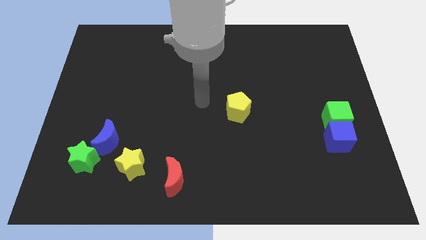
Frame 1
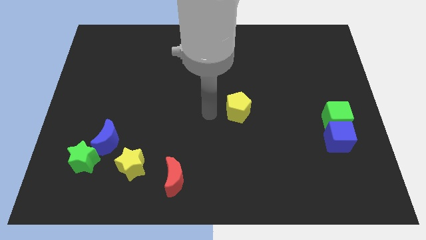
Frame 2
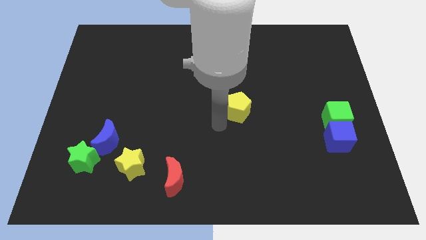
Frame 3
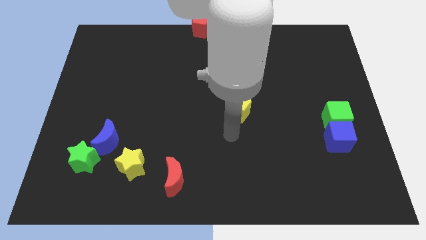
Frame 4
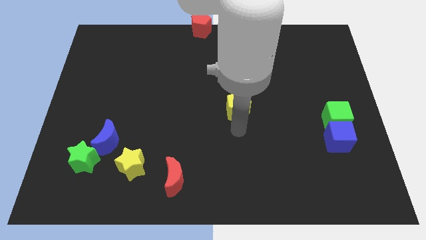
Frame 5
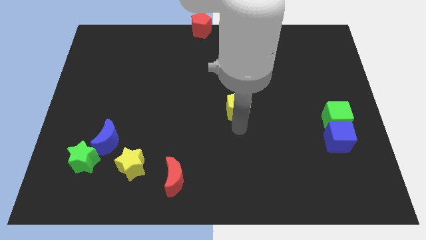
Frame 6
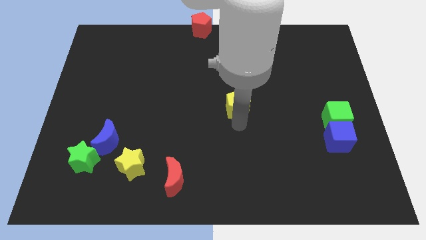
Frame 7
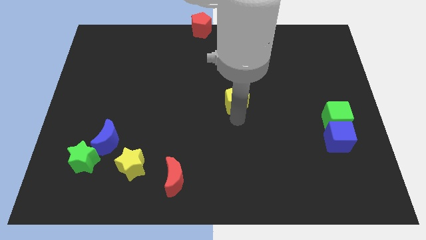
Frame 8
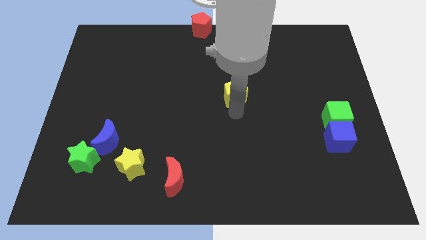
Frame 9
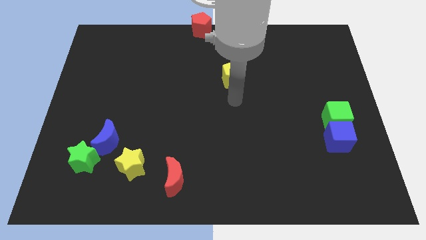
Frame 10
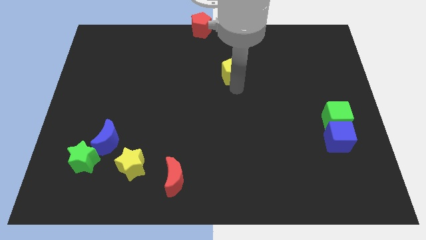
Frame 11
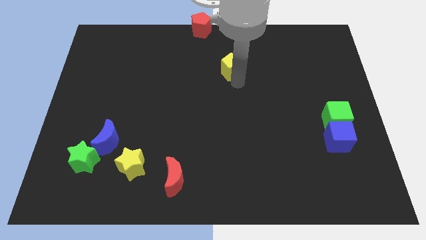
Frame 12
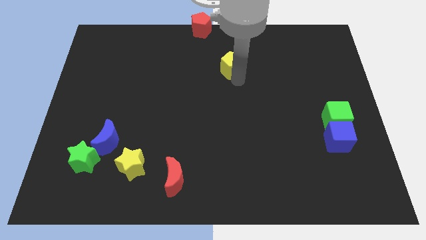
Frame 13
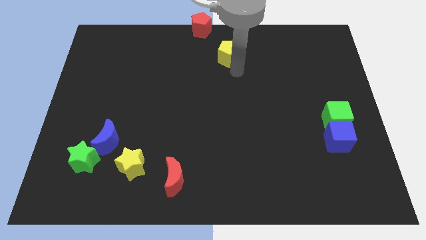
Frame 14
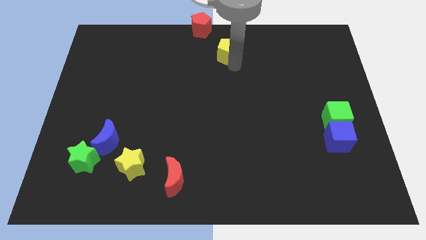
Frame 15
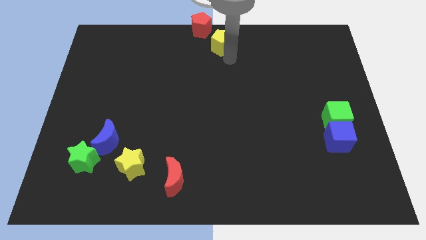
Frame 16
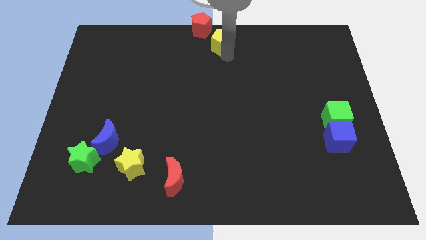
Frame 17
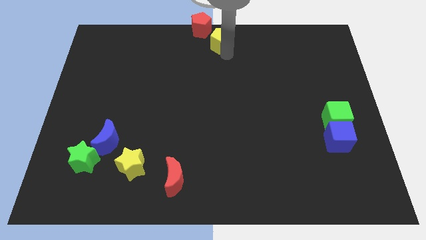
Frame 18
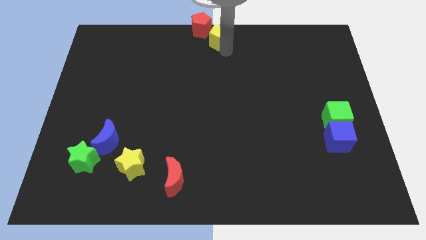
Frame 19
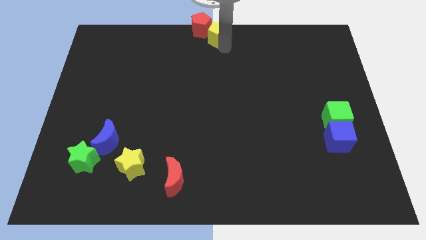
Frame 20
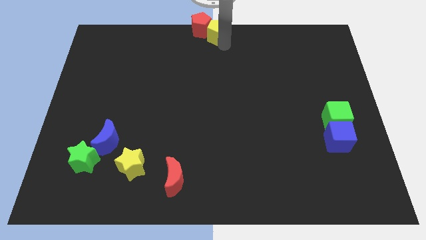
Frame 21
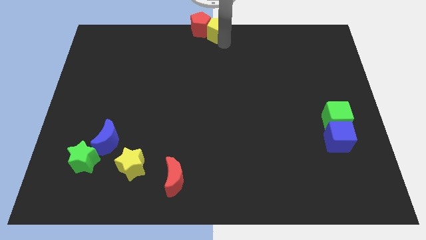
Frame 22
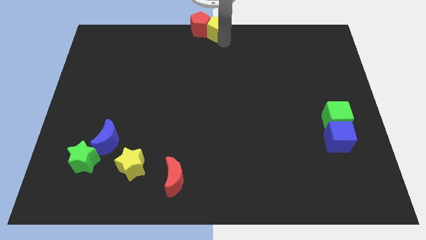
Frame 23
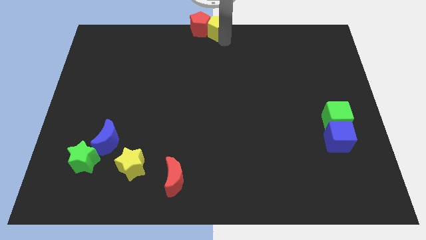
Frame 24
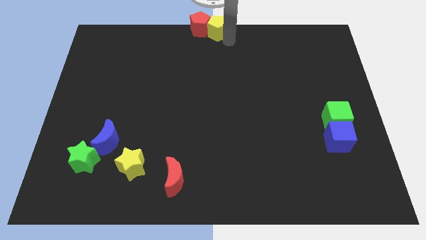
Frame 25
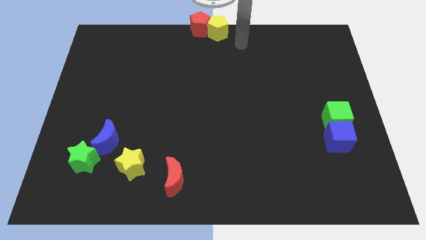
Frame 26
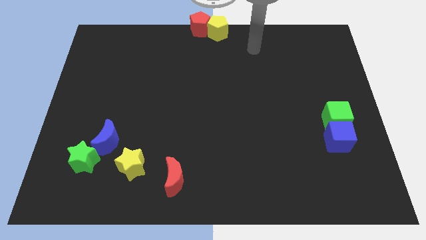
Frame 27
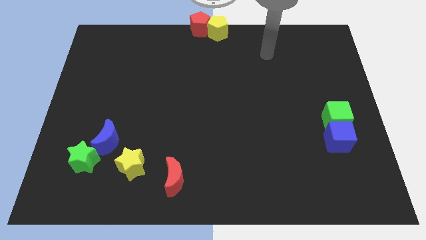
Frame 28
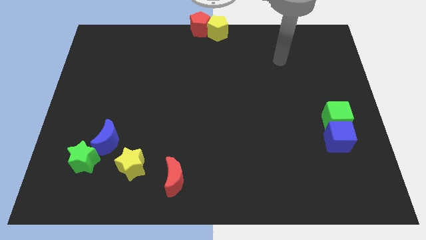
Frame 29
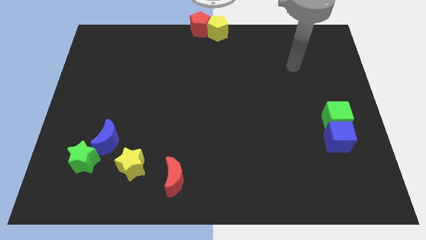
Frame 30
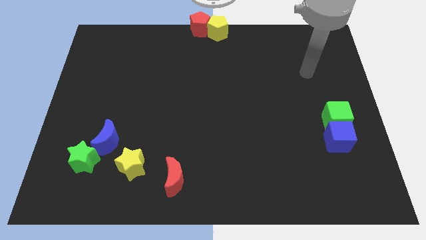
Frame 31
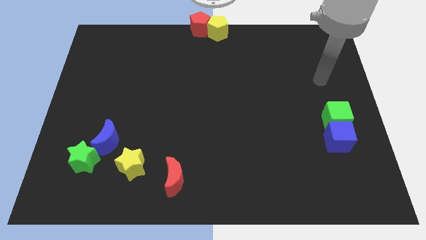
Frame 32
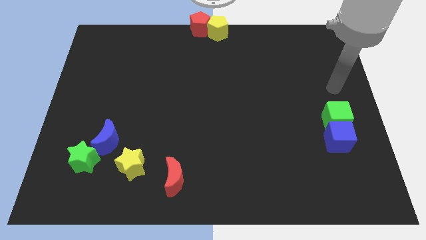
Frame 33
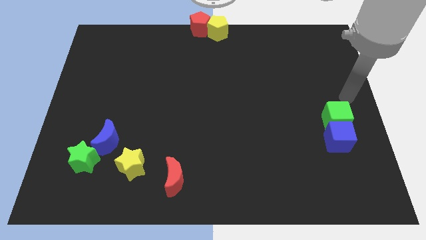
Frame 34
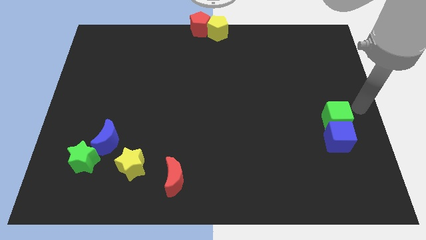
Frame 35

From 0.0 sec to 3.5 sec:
place the yellow pentagon to the right side of red pentagon

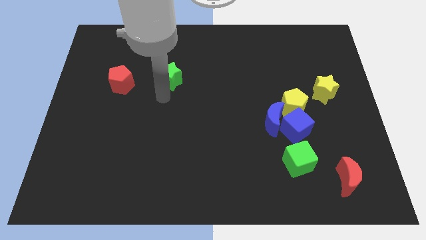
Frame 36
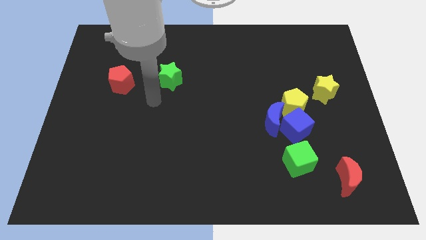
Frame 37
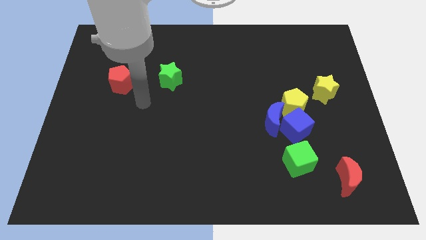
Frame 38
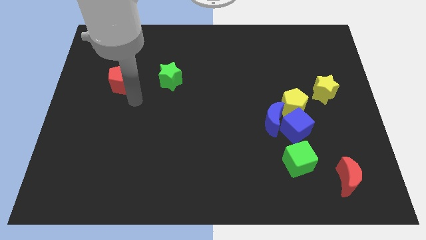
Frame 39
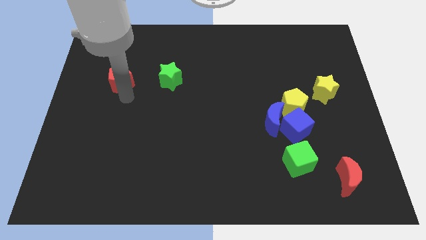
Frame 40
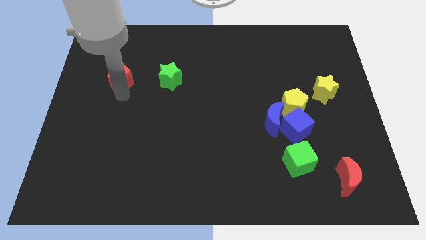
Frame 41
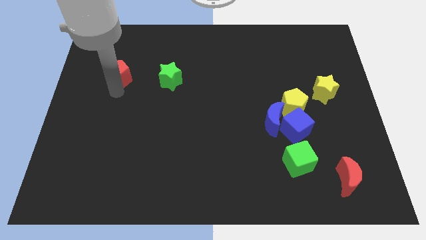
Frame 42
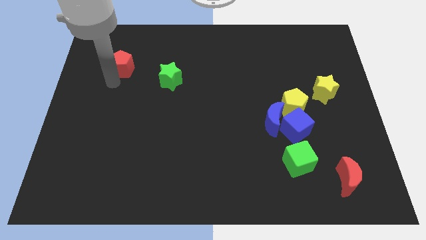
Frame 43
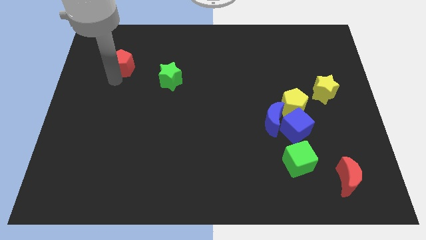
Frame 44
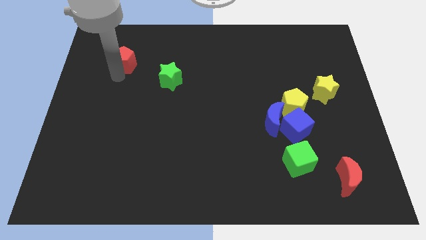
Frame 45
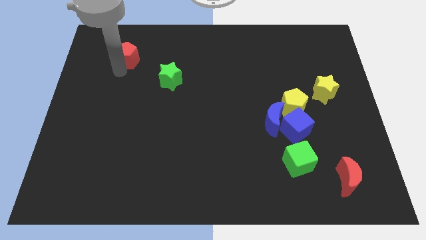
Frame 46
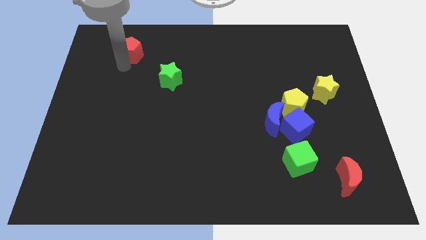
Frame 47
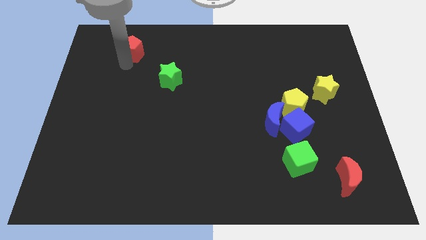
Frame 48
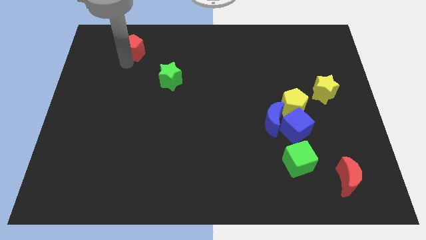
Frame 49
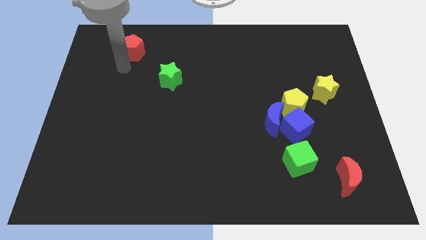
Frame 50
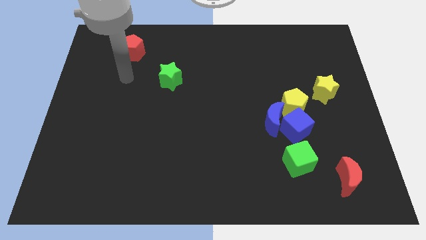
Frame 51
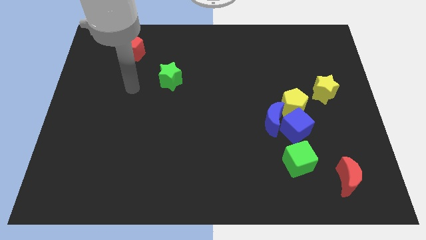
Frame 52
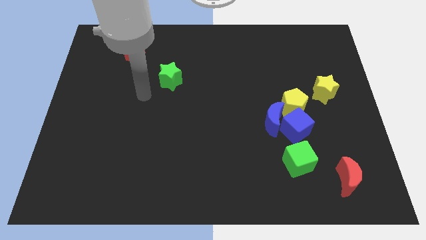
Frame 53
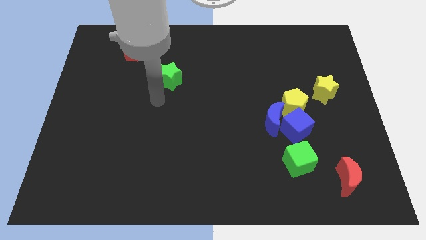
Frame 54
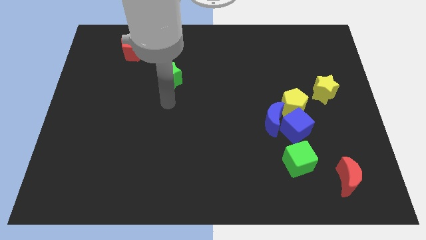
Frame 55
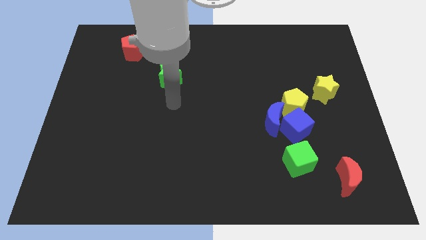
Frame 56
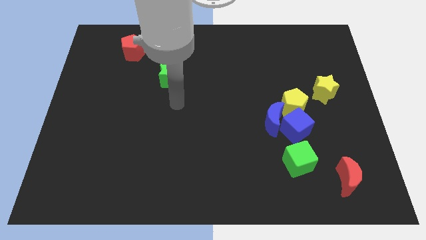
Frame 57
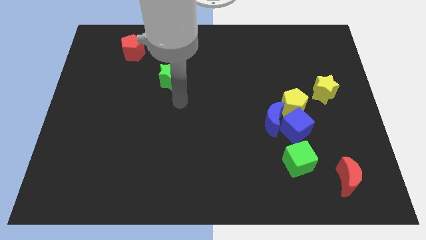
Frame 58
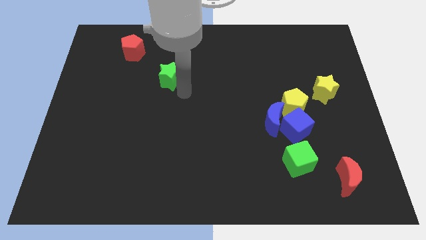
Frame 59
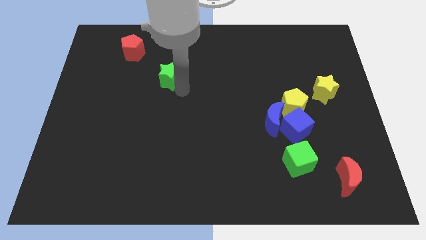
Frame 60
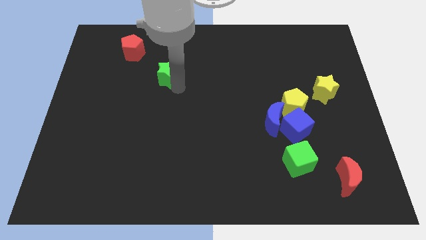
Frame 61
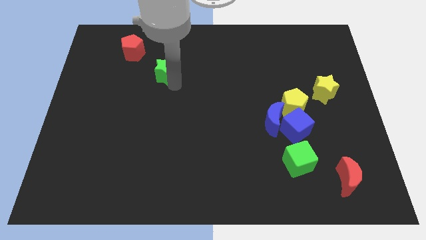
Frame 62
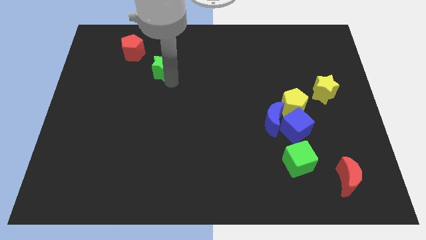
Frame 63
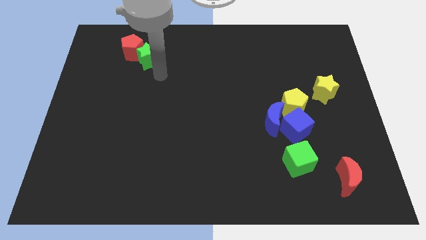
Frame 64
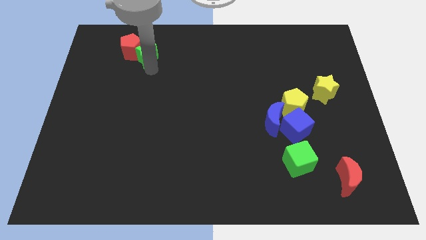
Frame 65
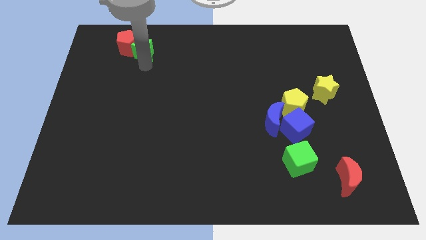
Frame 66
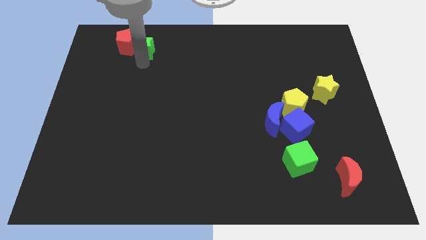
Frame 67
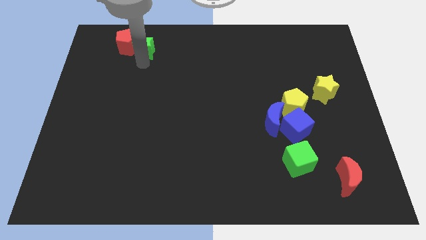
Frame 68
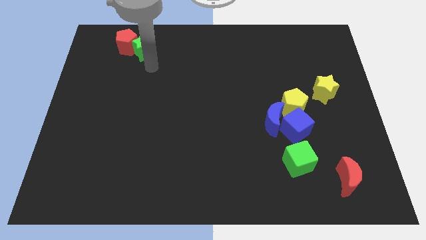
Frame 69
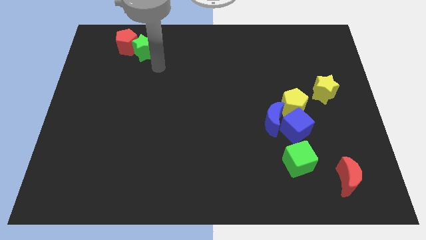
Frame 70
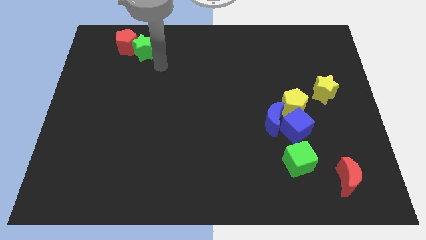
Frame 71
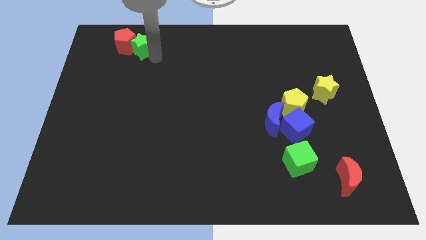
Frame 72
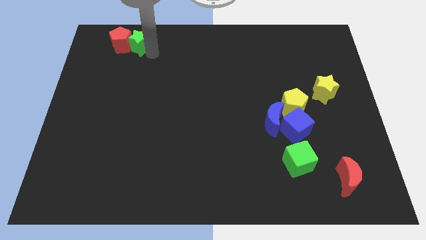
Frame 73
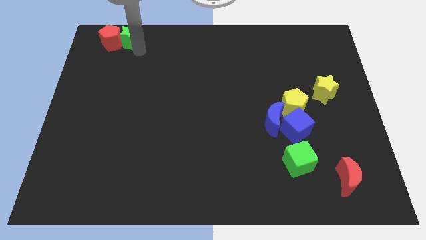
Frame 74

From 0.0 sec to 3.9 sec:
push green star in to red pentagon

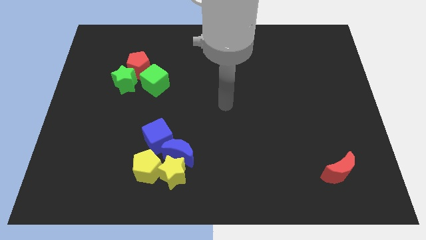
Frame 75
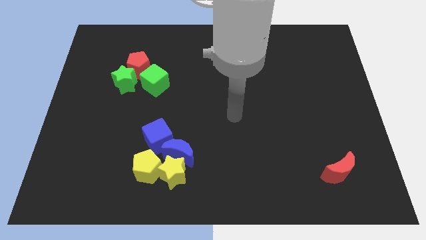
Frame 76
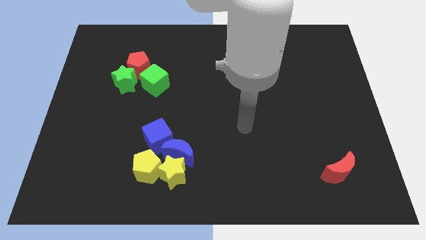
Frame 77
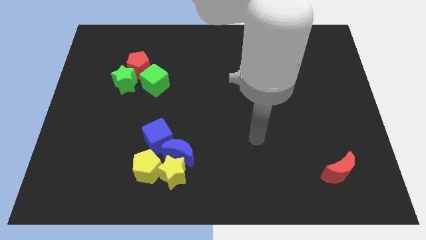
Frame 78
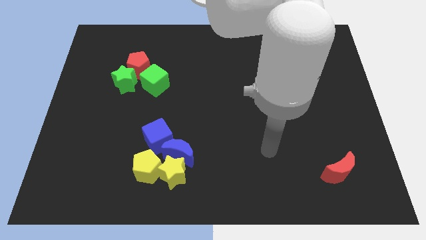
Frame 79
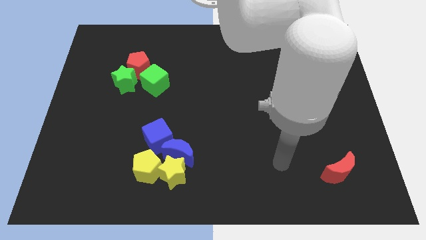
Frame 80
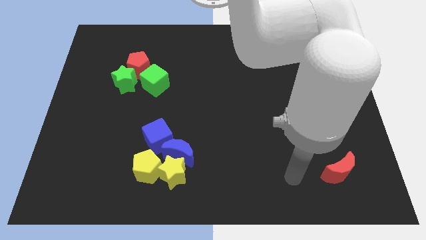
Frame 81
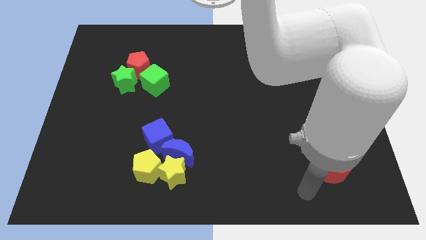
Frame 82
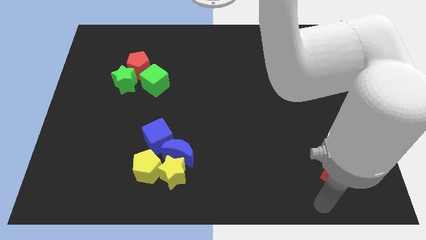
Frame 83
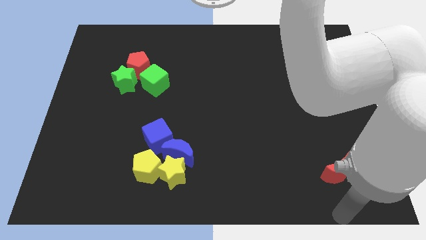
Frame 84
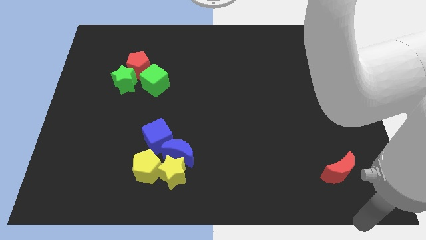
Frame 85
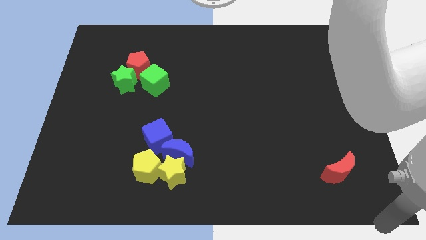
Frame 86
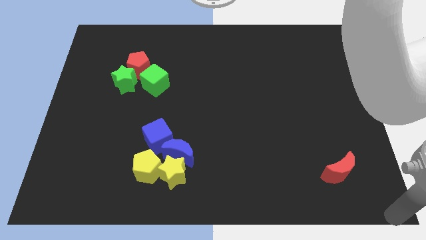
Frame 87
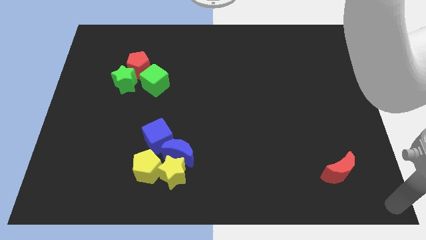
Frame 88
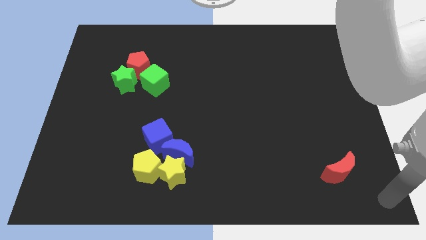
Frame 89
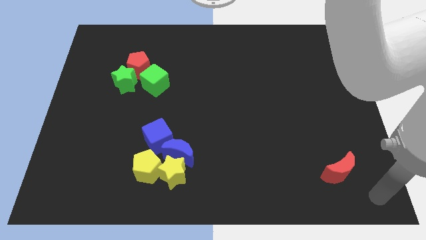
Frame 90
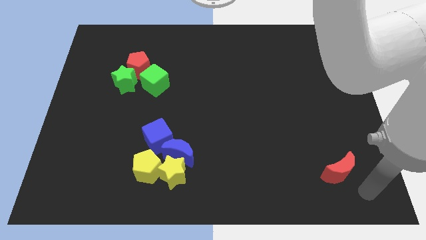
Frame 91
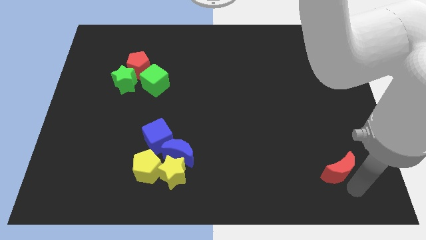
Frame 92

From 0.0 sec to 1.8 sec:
move your arm close to the red moon
